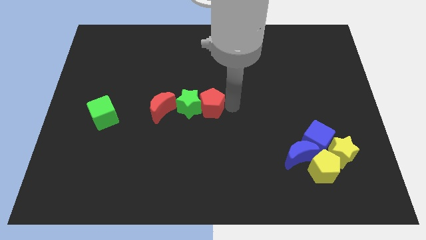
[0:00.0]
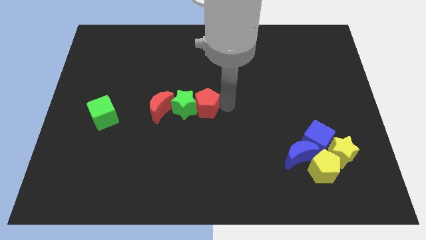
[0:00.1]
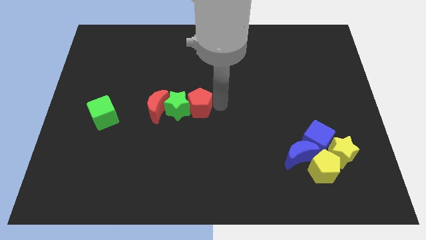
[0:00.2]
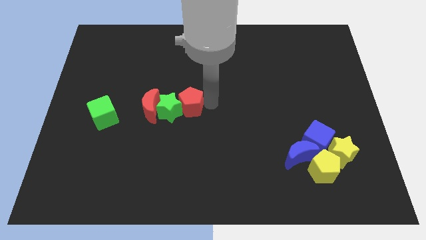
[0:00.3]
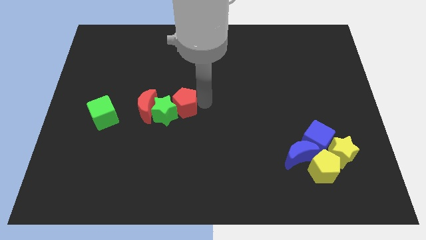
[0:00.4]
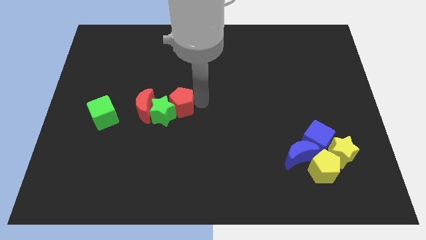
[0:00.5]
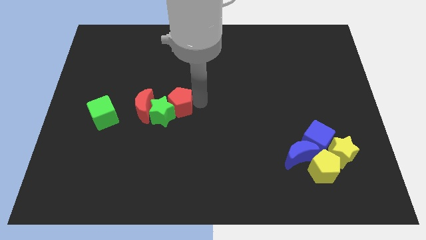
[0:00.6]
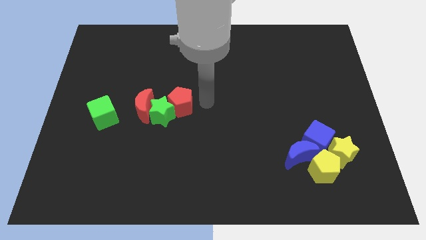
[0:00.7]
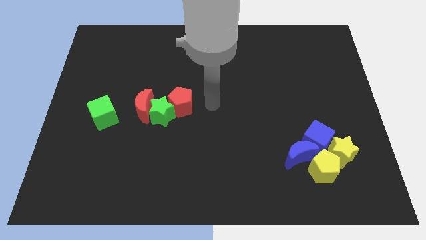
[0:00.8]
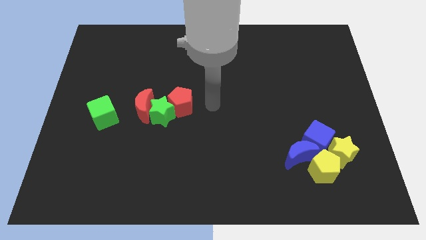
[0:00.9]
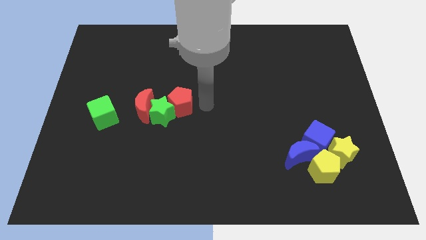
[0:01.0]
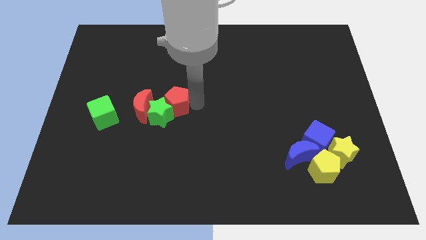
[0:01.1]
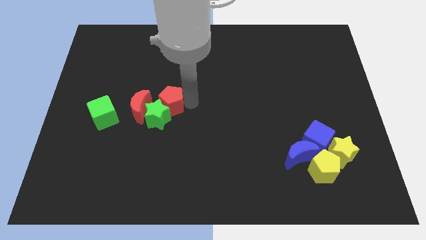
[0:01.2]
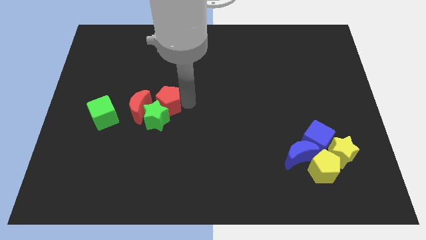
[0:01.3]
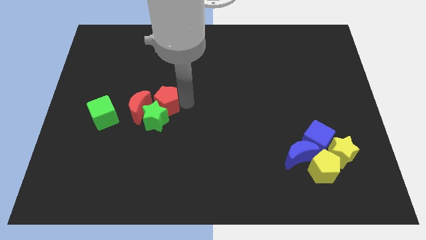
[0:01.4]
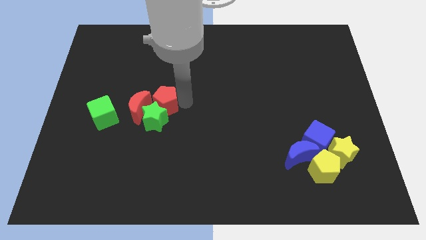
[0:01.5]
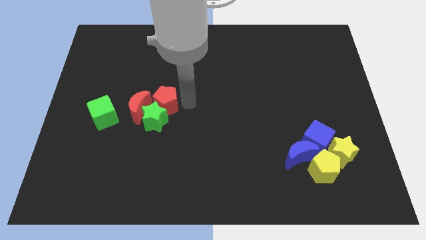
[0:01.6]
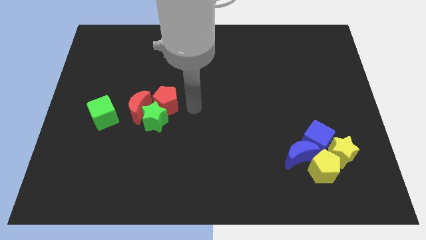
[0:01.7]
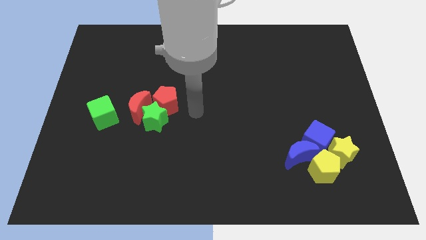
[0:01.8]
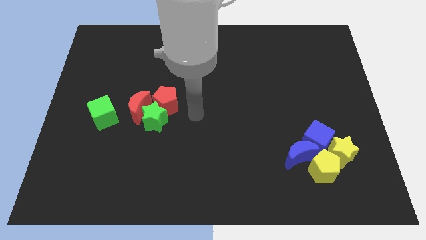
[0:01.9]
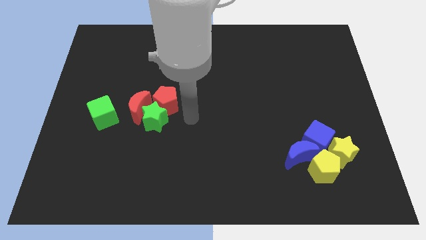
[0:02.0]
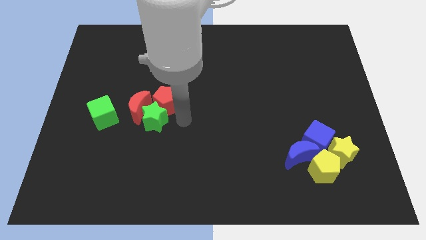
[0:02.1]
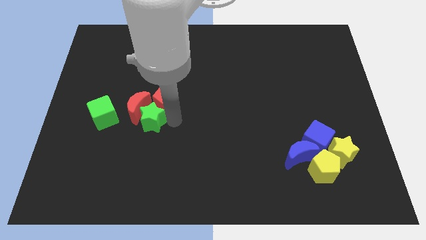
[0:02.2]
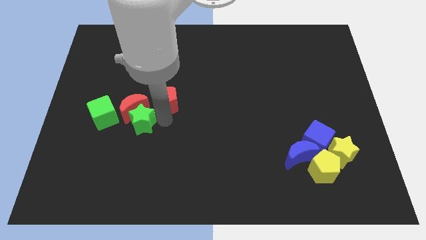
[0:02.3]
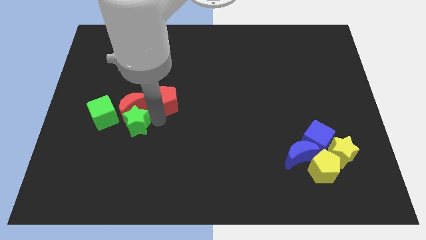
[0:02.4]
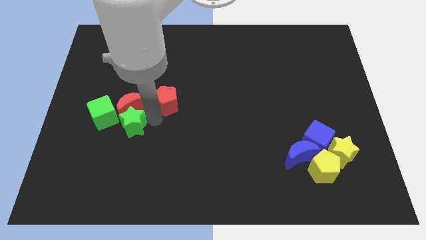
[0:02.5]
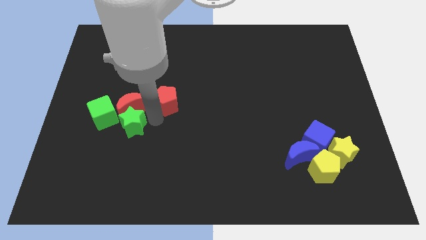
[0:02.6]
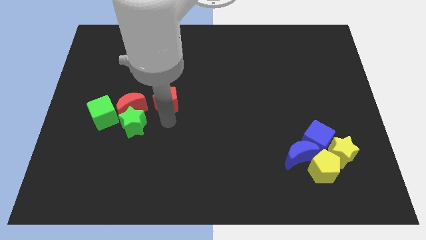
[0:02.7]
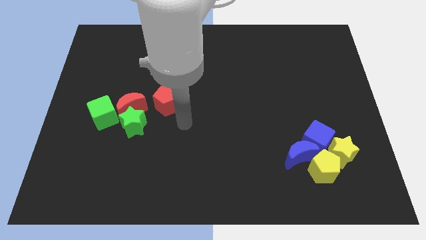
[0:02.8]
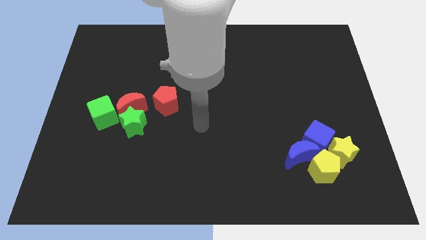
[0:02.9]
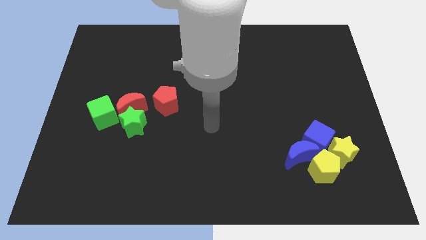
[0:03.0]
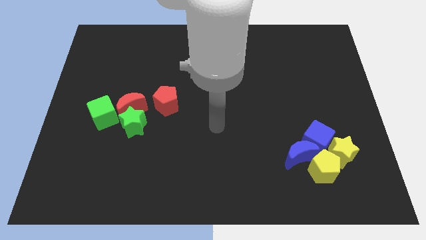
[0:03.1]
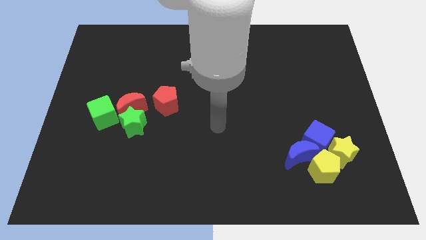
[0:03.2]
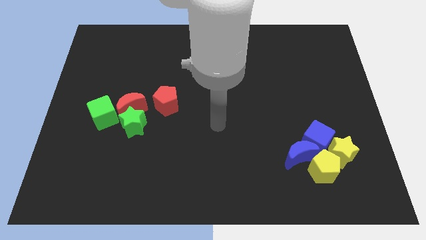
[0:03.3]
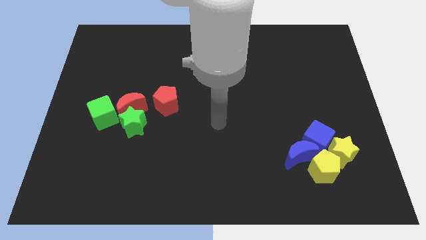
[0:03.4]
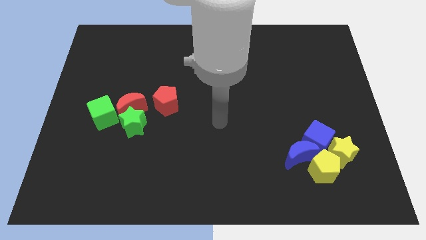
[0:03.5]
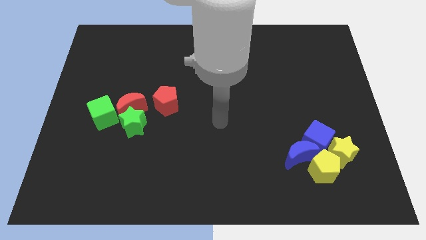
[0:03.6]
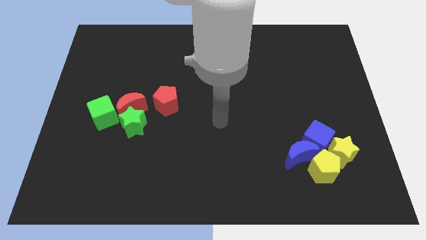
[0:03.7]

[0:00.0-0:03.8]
move the group of blocks towards the right of green star

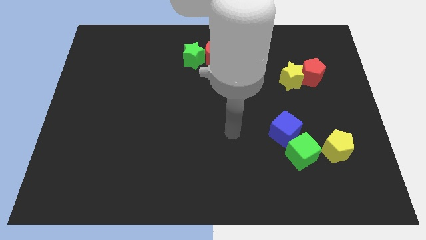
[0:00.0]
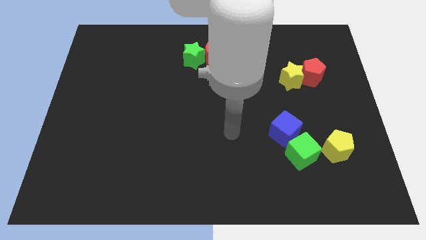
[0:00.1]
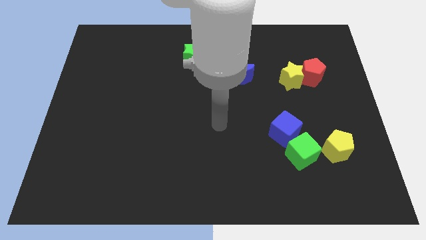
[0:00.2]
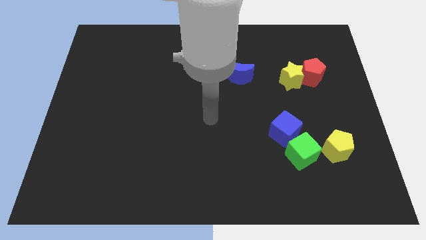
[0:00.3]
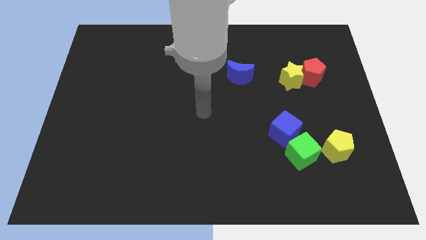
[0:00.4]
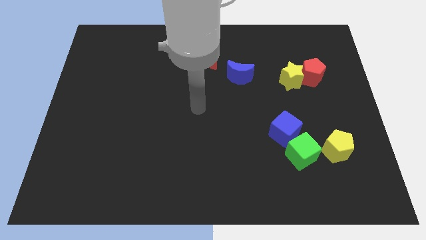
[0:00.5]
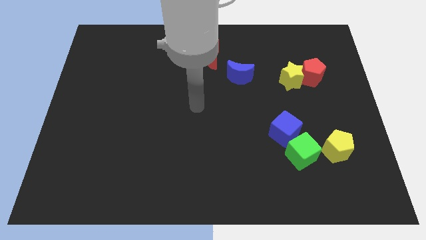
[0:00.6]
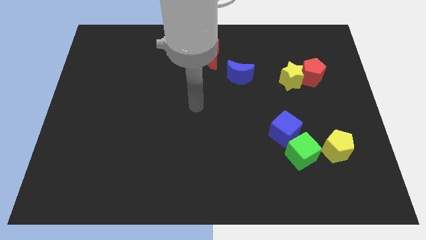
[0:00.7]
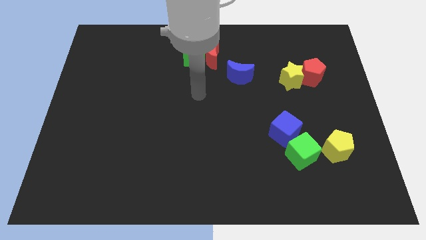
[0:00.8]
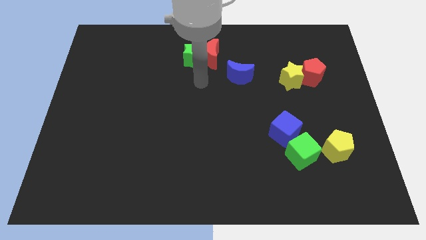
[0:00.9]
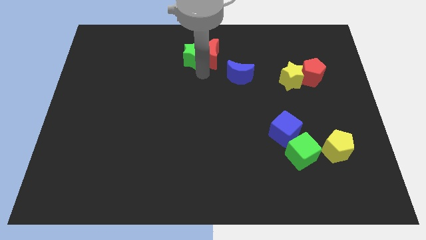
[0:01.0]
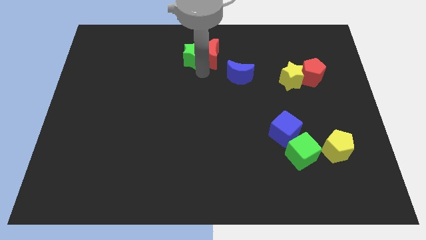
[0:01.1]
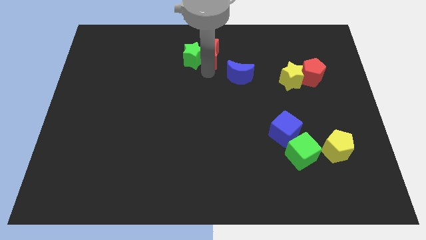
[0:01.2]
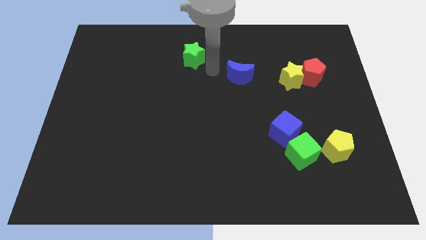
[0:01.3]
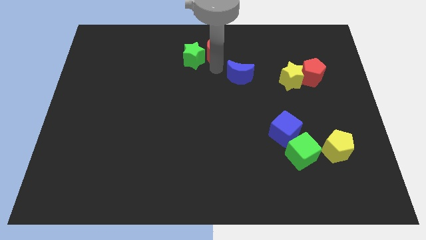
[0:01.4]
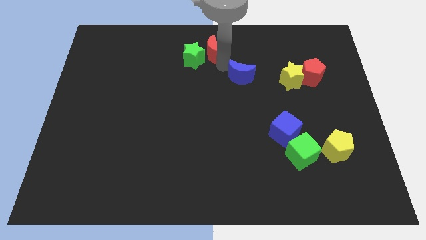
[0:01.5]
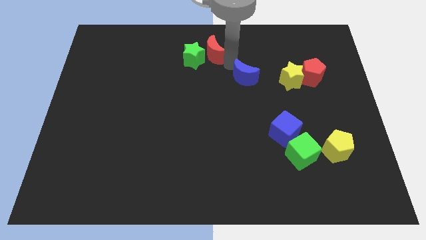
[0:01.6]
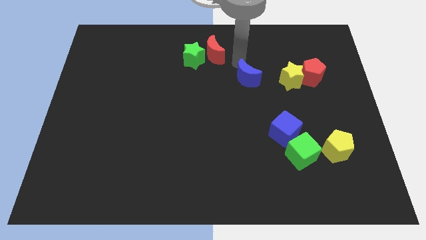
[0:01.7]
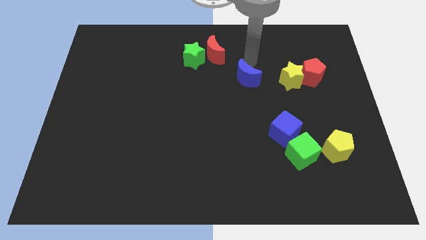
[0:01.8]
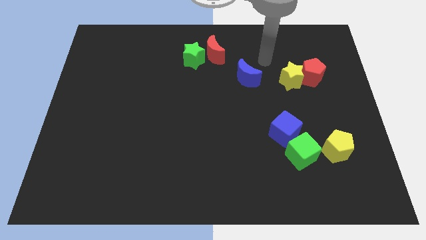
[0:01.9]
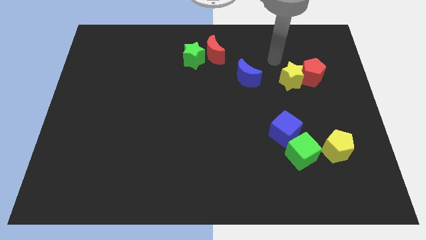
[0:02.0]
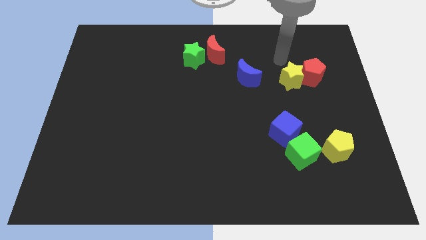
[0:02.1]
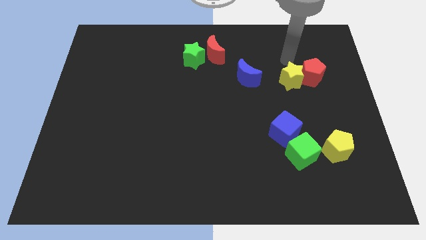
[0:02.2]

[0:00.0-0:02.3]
push blue moon slightly to the right

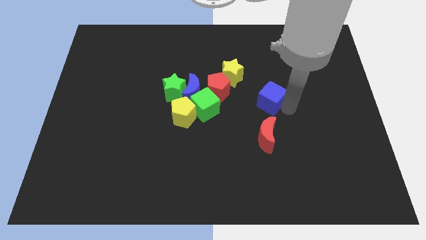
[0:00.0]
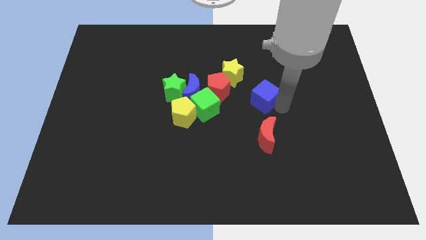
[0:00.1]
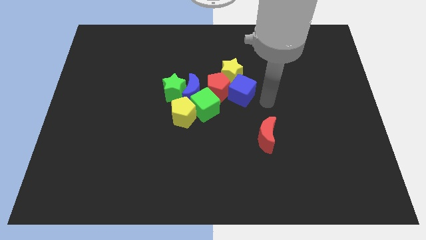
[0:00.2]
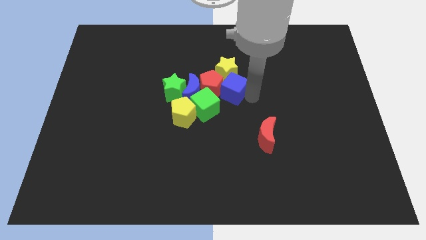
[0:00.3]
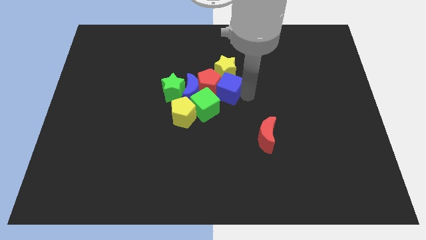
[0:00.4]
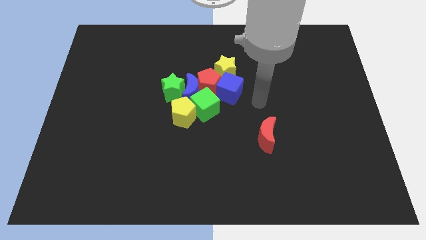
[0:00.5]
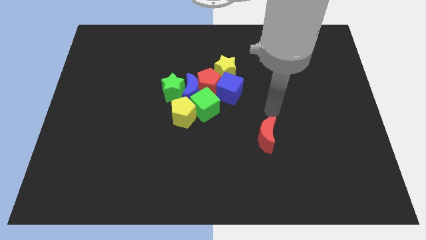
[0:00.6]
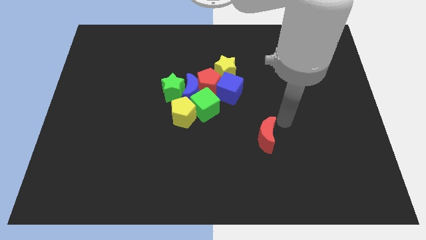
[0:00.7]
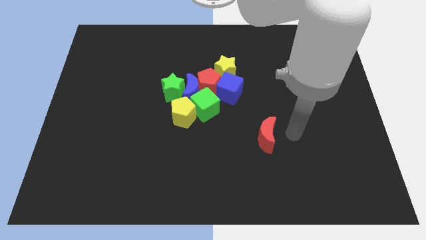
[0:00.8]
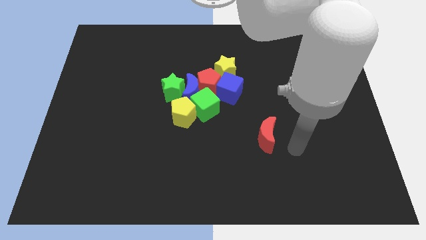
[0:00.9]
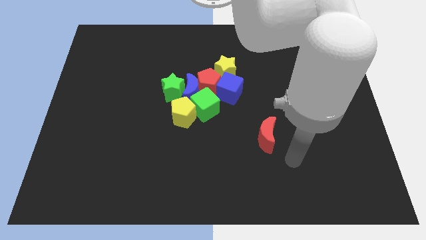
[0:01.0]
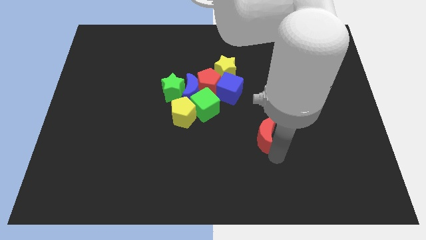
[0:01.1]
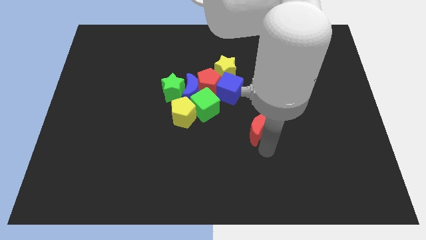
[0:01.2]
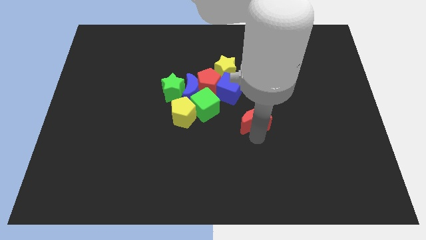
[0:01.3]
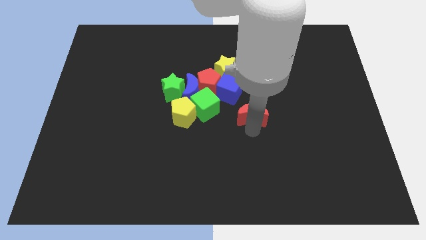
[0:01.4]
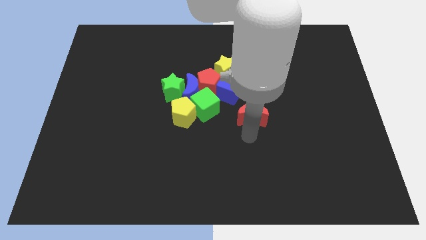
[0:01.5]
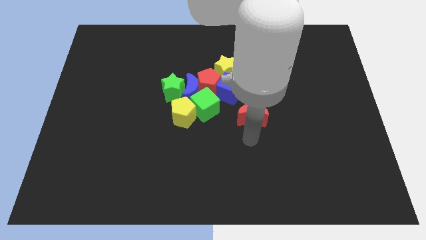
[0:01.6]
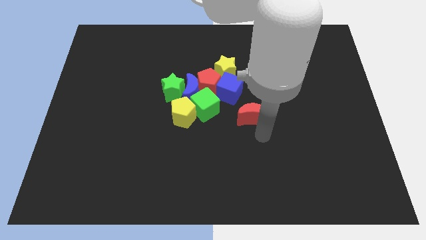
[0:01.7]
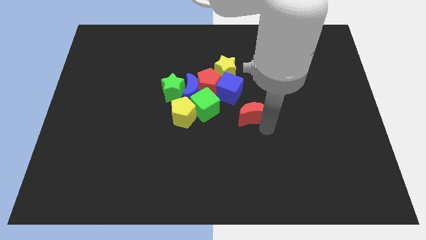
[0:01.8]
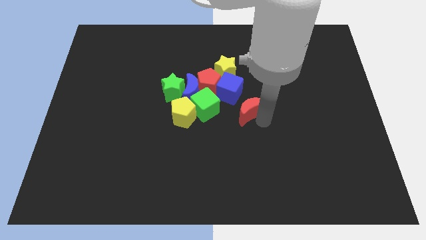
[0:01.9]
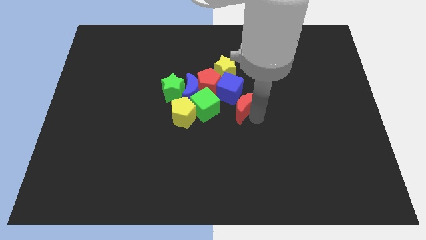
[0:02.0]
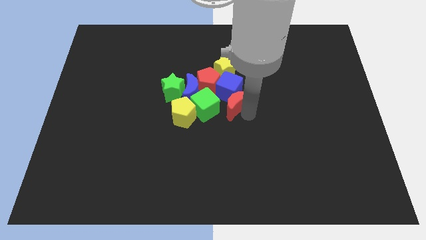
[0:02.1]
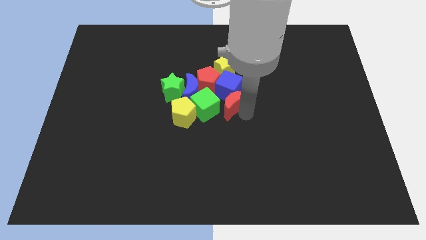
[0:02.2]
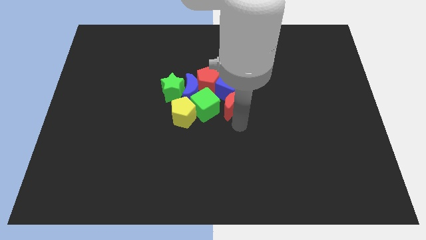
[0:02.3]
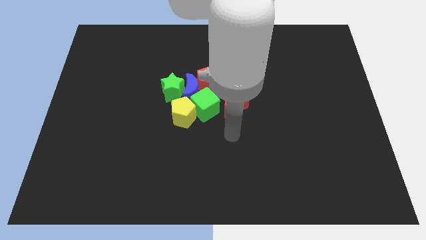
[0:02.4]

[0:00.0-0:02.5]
push the red moon into blue cube

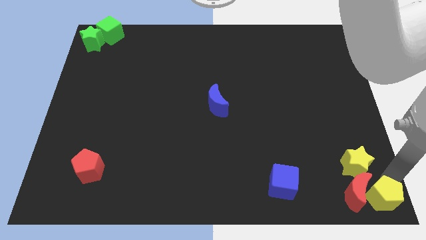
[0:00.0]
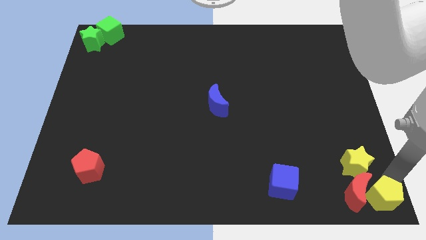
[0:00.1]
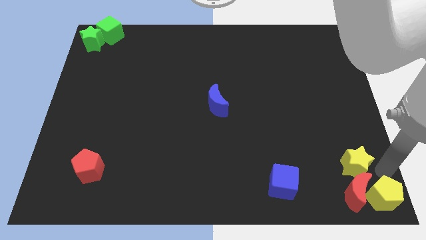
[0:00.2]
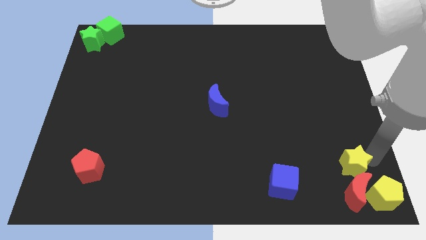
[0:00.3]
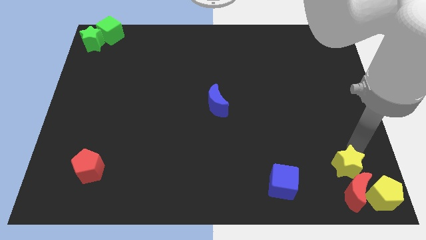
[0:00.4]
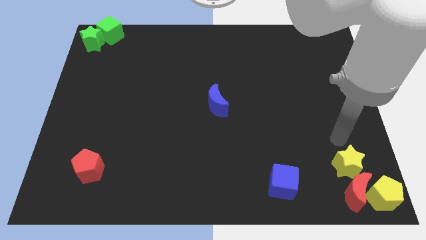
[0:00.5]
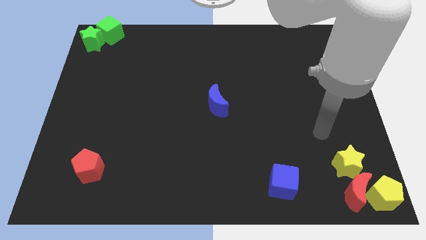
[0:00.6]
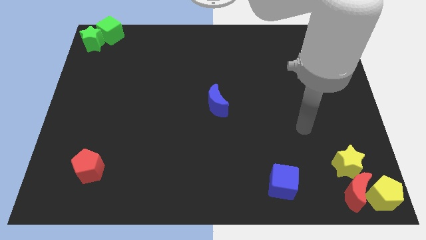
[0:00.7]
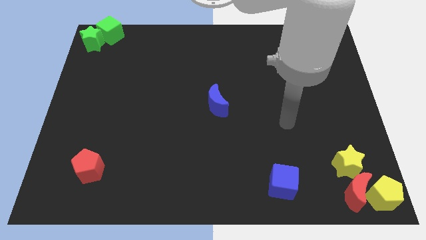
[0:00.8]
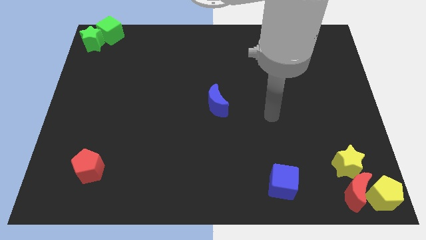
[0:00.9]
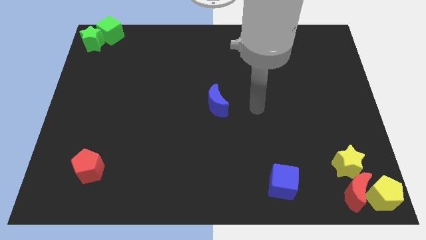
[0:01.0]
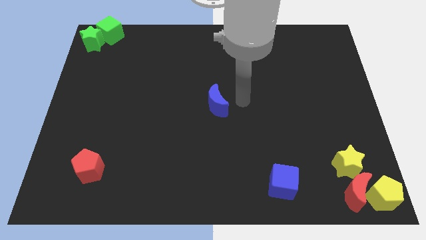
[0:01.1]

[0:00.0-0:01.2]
slightly move the yellow star
